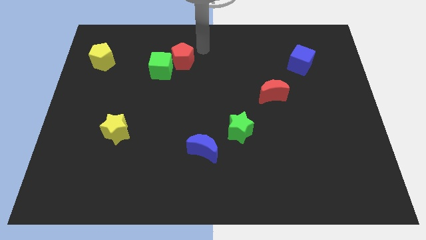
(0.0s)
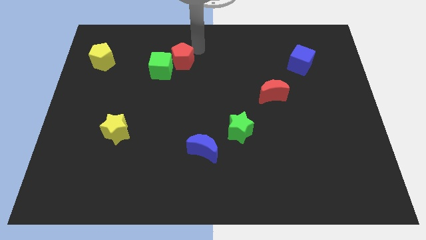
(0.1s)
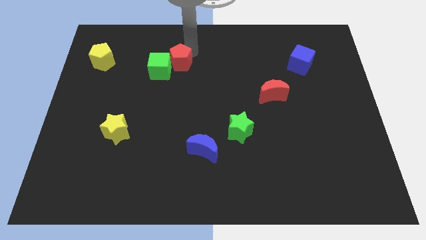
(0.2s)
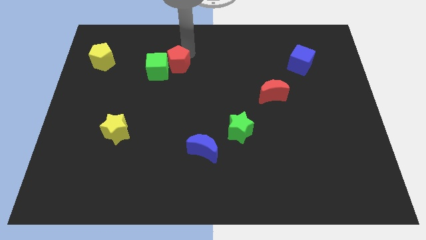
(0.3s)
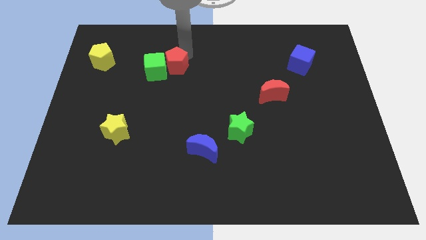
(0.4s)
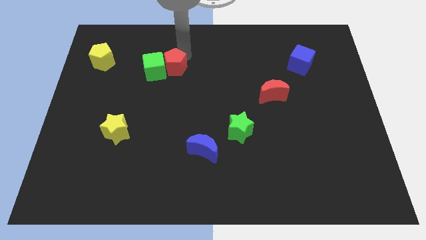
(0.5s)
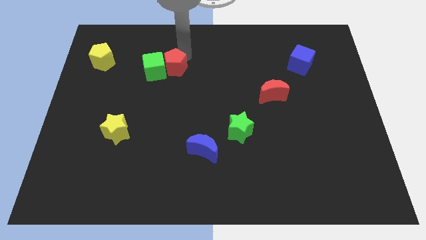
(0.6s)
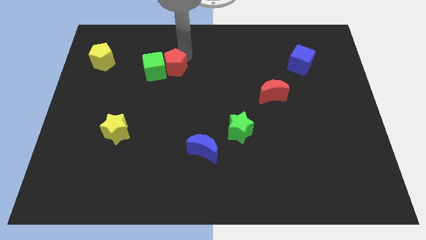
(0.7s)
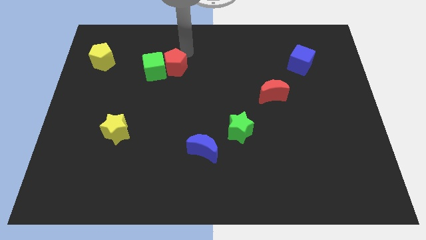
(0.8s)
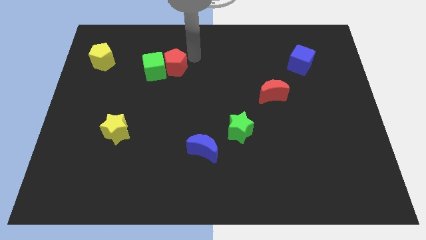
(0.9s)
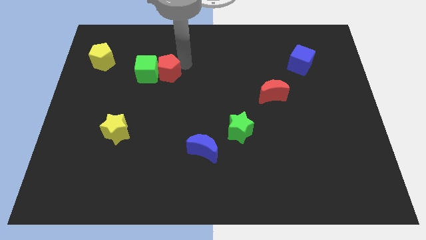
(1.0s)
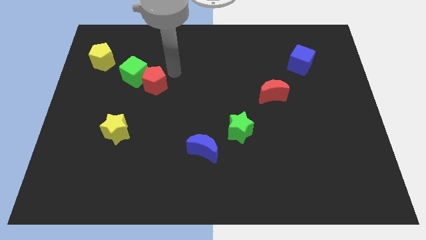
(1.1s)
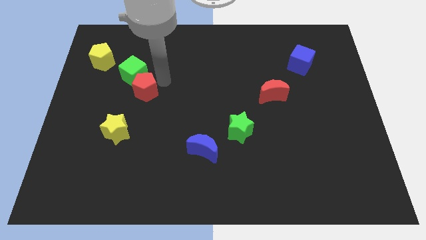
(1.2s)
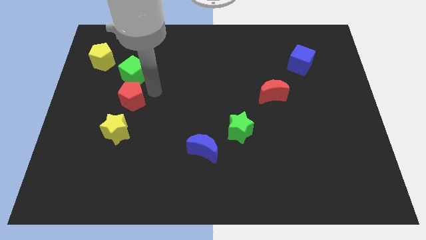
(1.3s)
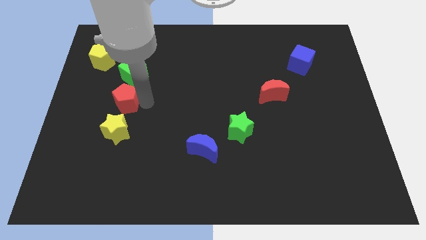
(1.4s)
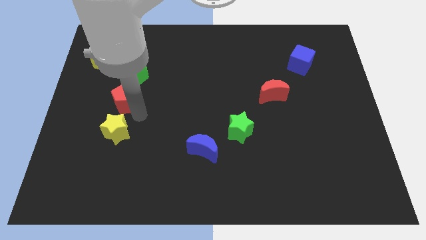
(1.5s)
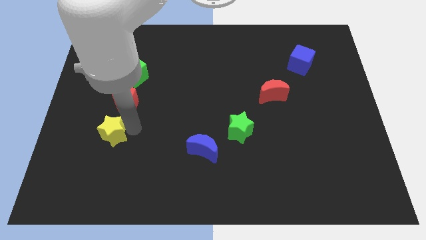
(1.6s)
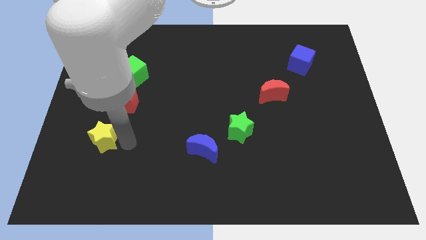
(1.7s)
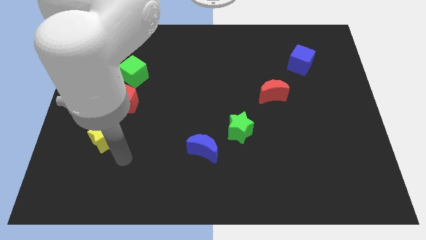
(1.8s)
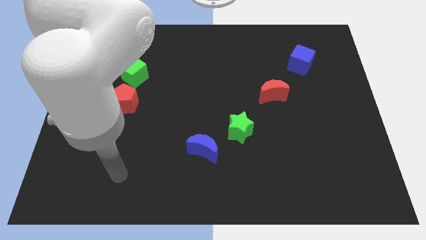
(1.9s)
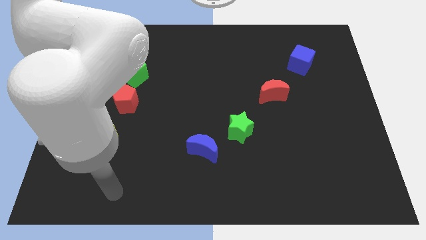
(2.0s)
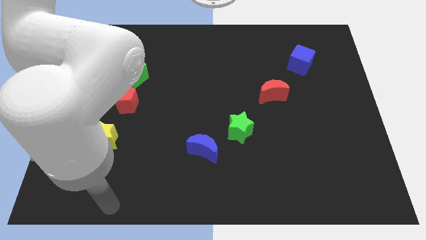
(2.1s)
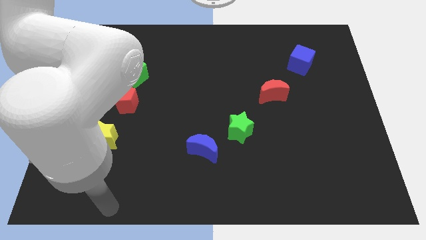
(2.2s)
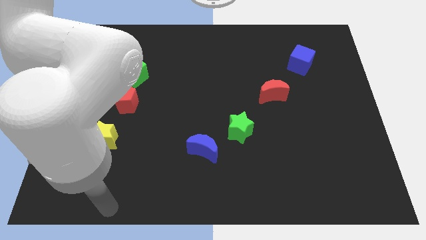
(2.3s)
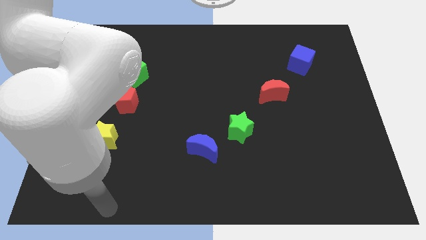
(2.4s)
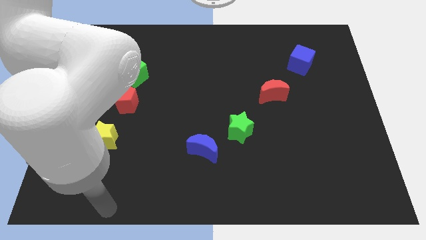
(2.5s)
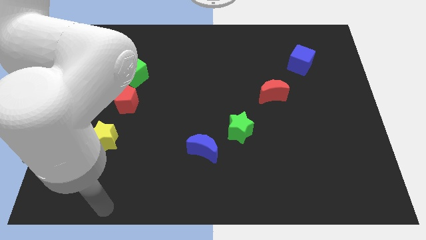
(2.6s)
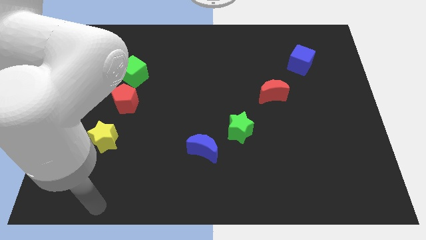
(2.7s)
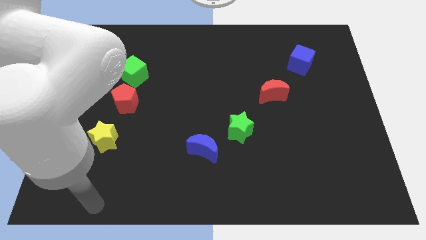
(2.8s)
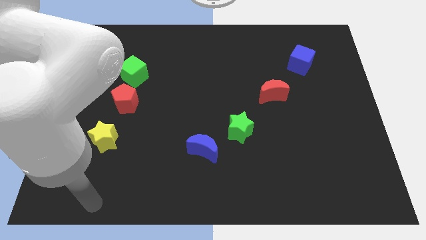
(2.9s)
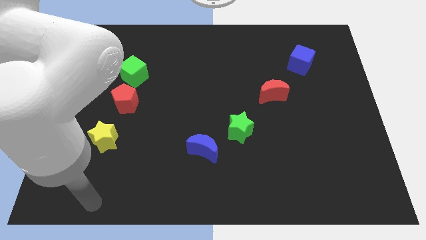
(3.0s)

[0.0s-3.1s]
push red pentagon above the yellow star

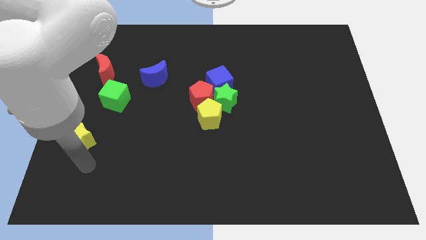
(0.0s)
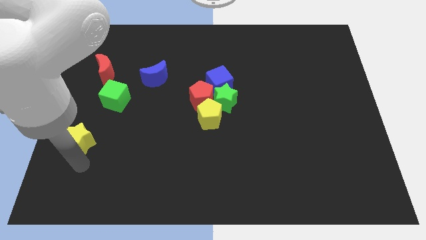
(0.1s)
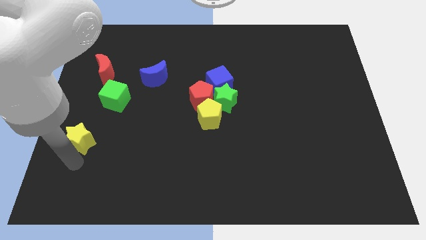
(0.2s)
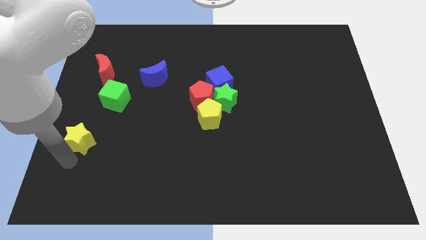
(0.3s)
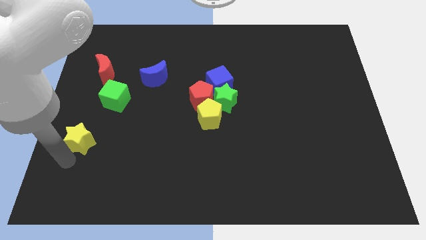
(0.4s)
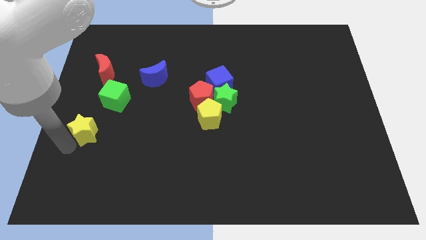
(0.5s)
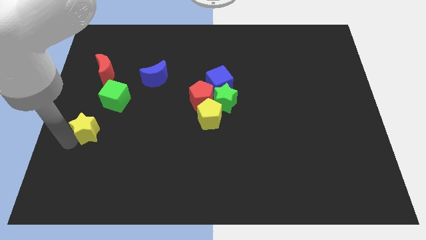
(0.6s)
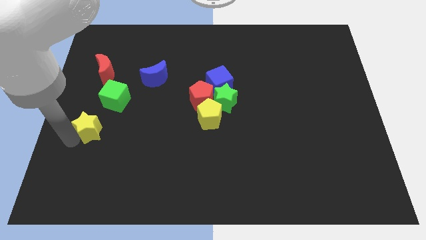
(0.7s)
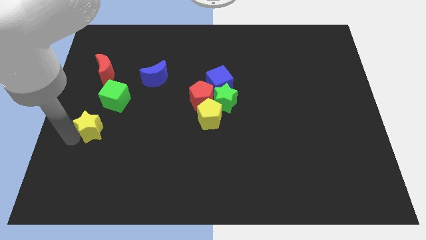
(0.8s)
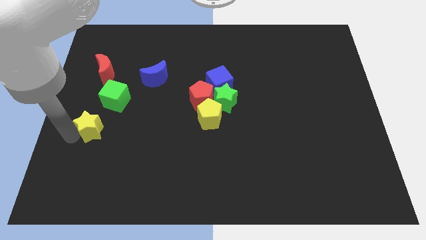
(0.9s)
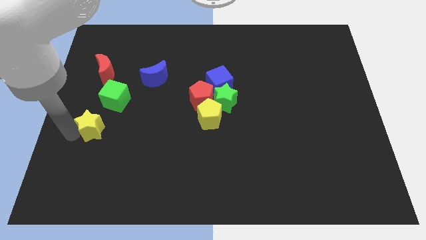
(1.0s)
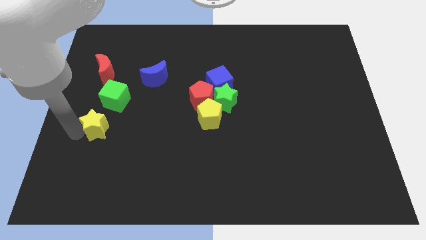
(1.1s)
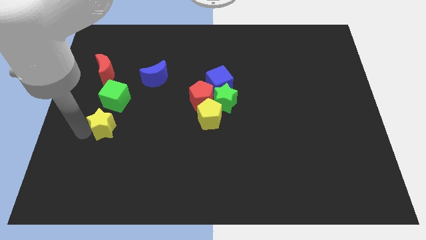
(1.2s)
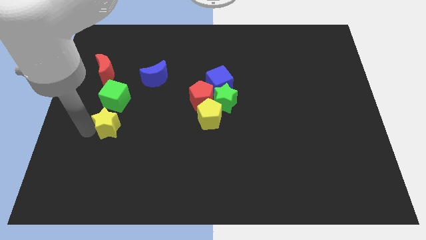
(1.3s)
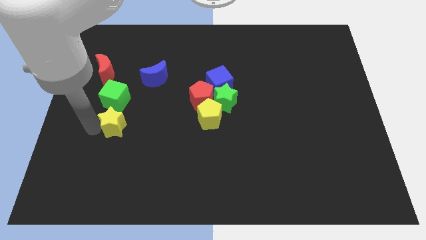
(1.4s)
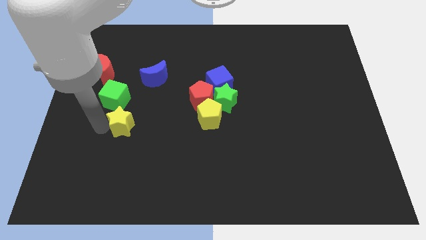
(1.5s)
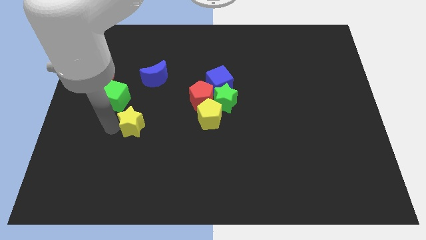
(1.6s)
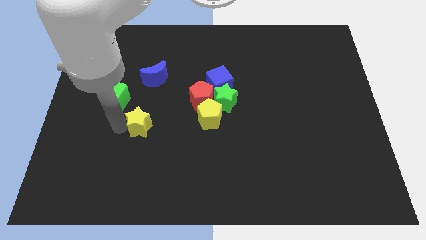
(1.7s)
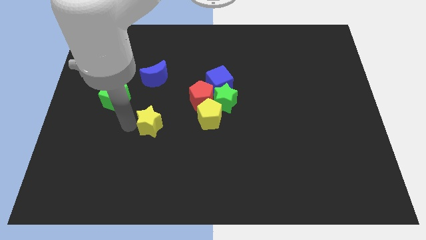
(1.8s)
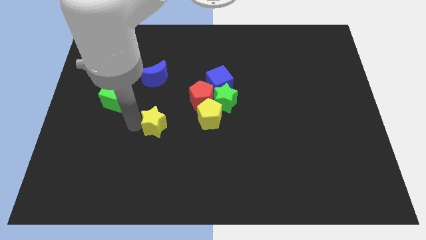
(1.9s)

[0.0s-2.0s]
move the yellow star at the bottom right of the green cube

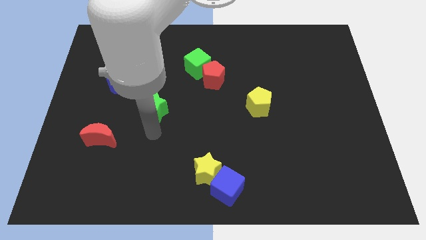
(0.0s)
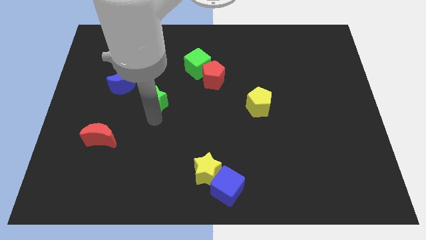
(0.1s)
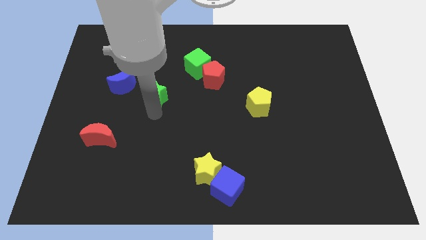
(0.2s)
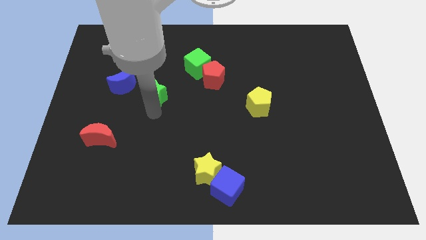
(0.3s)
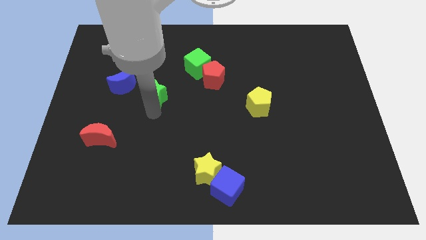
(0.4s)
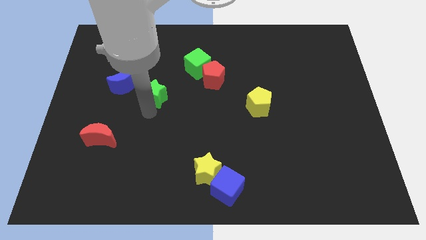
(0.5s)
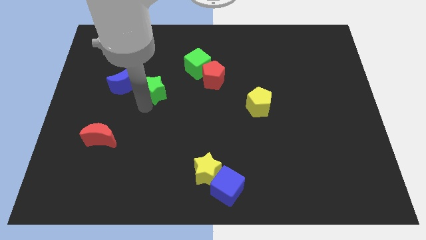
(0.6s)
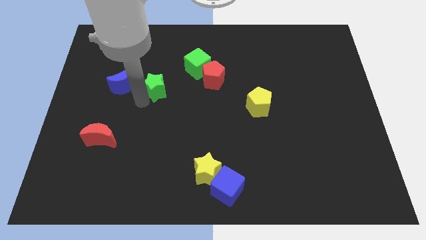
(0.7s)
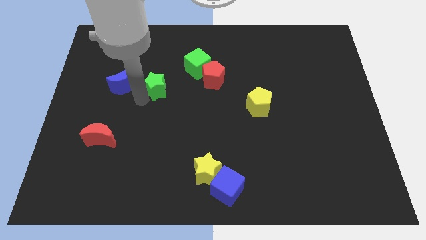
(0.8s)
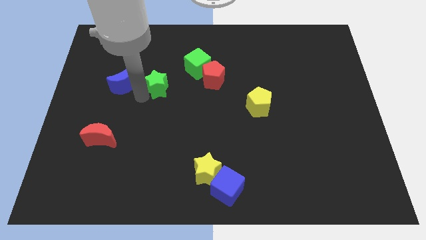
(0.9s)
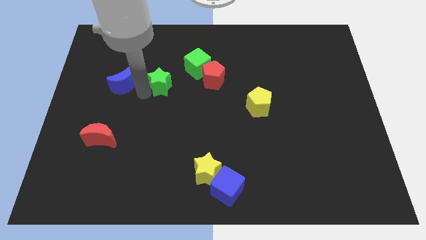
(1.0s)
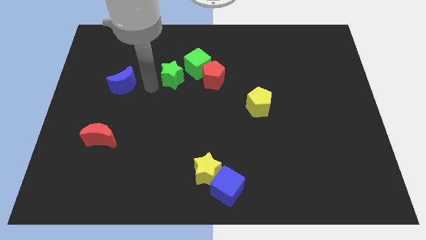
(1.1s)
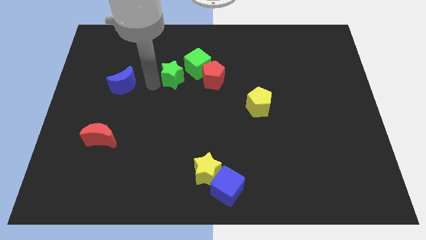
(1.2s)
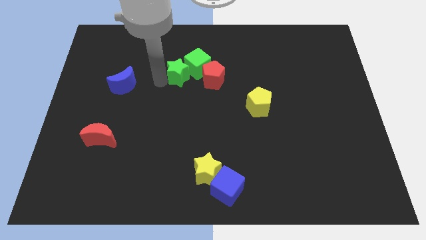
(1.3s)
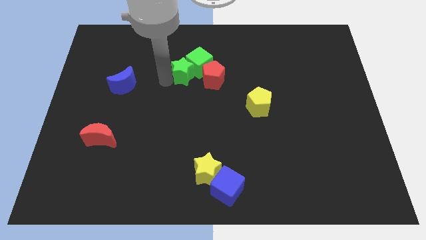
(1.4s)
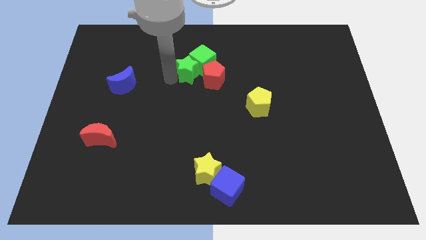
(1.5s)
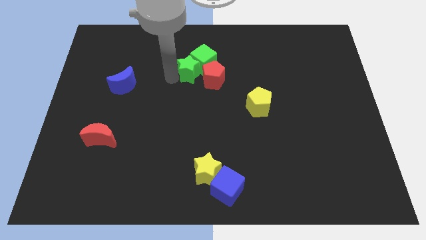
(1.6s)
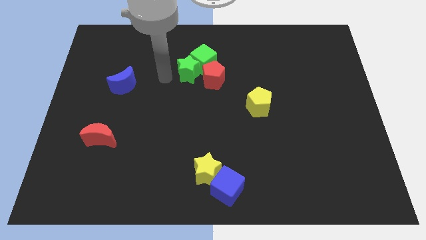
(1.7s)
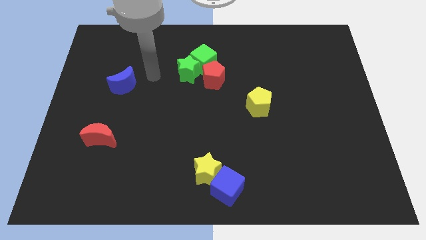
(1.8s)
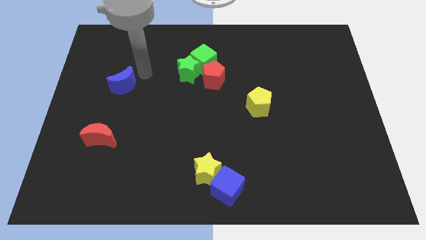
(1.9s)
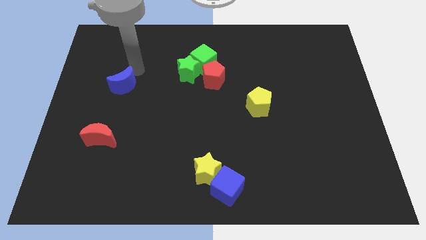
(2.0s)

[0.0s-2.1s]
push the green star into the green cube

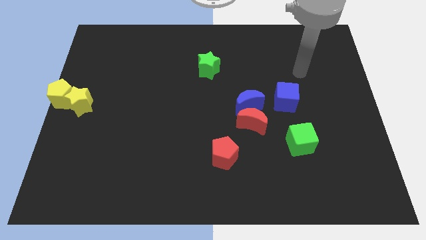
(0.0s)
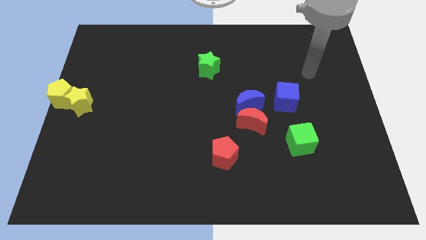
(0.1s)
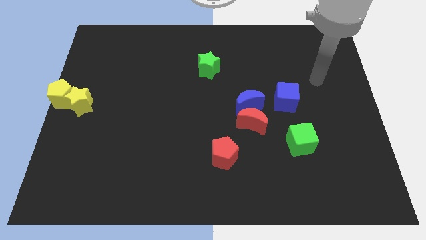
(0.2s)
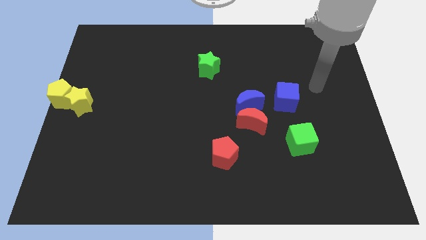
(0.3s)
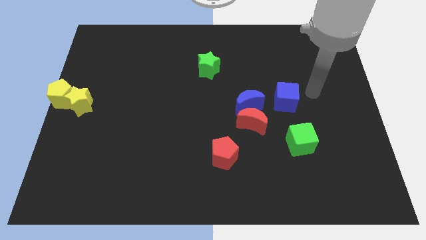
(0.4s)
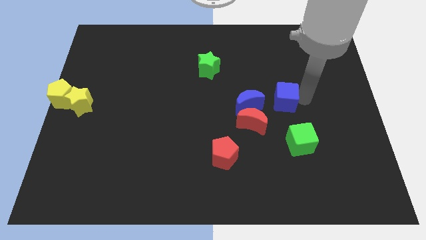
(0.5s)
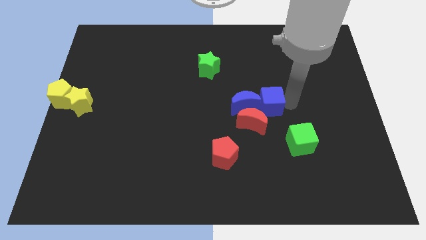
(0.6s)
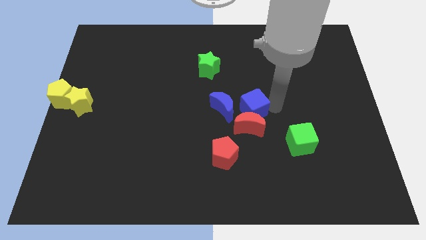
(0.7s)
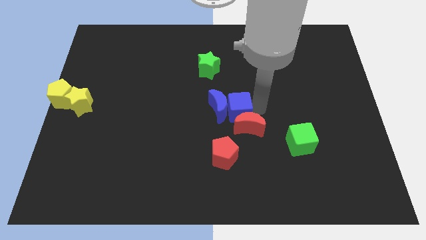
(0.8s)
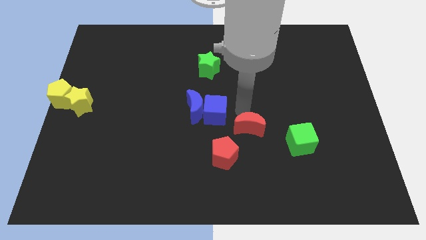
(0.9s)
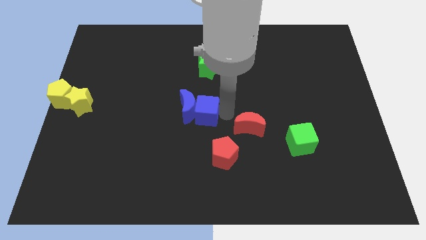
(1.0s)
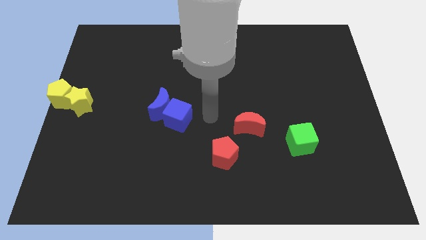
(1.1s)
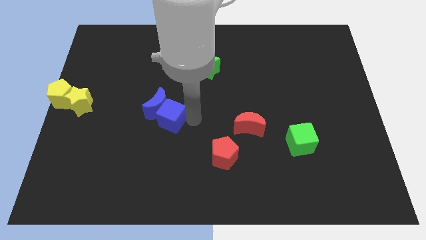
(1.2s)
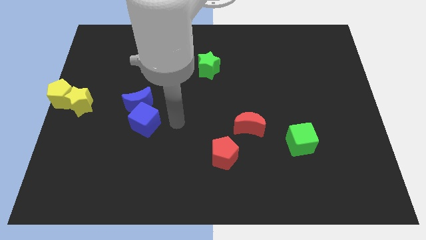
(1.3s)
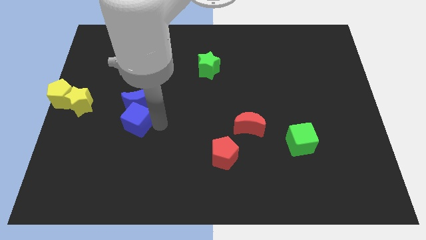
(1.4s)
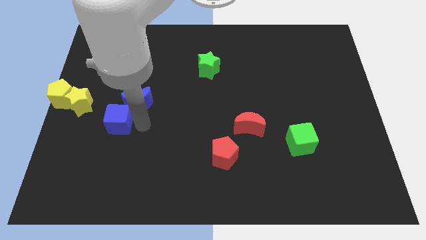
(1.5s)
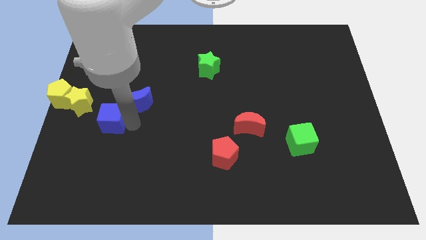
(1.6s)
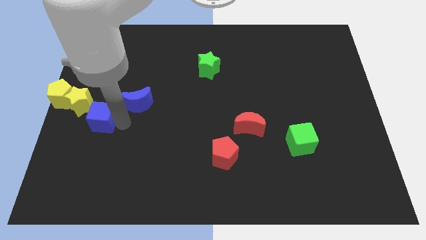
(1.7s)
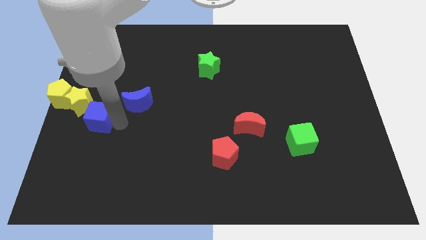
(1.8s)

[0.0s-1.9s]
push the blue cube and blue crescent to the left side center of the board
